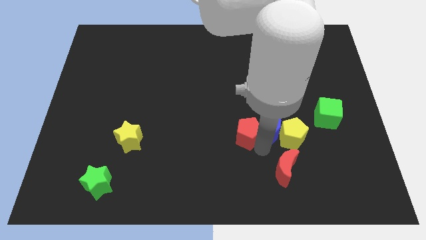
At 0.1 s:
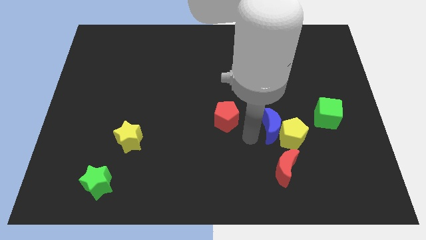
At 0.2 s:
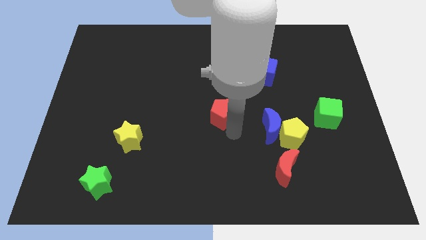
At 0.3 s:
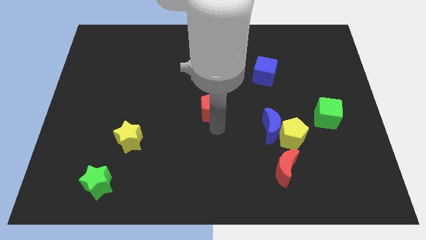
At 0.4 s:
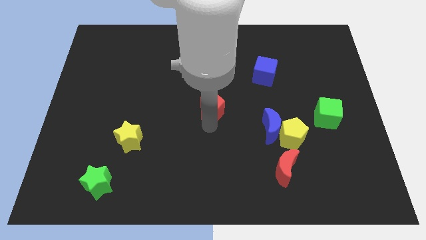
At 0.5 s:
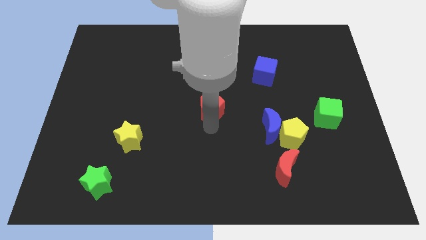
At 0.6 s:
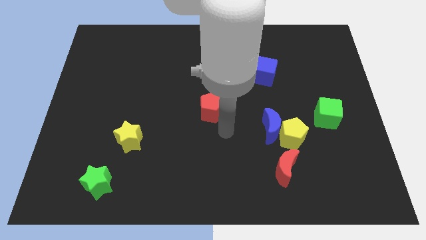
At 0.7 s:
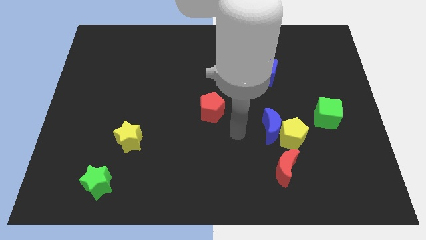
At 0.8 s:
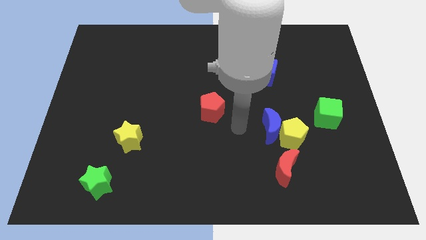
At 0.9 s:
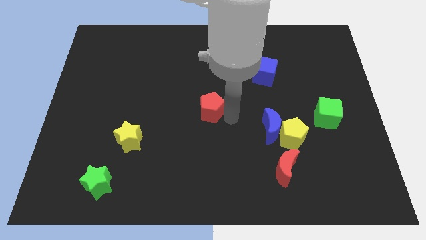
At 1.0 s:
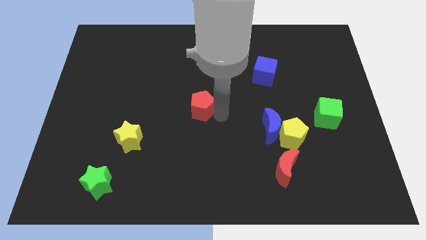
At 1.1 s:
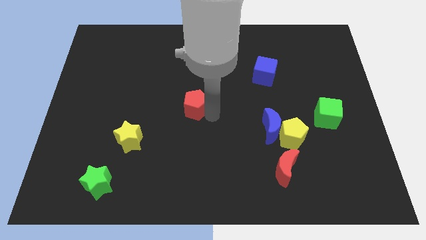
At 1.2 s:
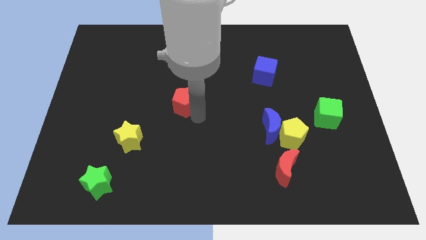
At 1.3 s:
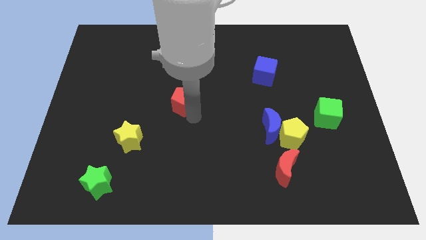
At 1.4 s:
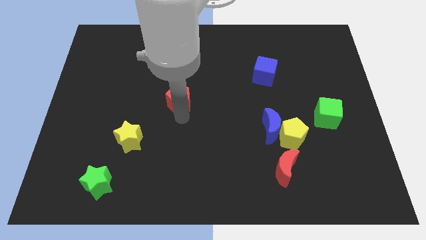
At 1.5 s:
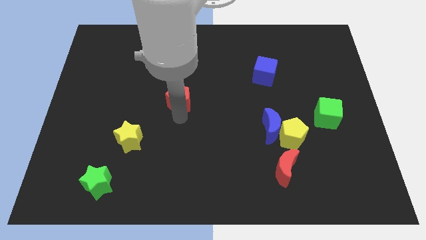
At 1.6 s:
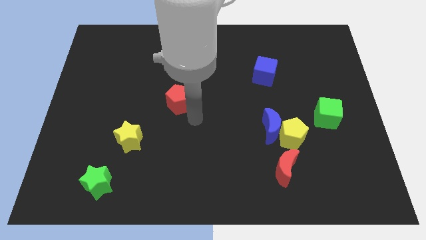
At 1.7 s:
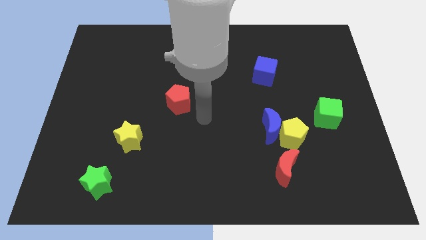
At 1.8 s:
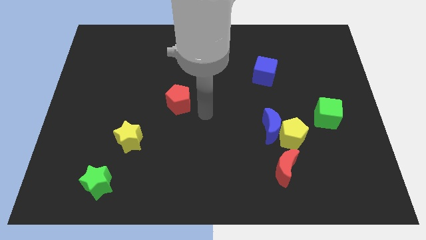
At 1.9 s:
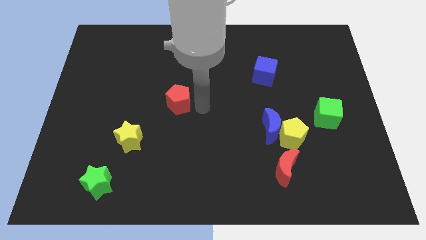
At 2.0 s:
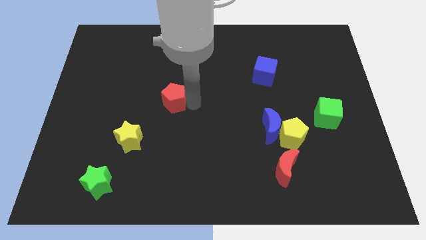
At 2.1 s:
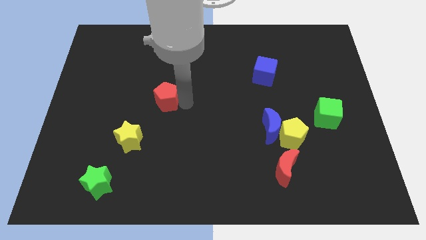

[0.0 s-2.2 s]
move the red pentagon to the top right of the yellow star

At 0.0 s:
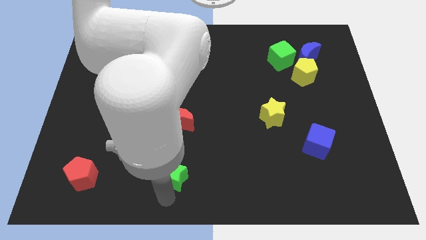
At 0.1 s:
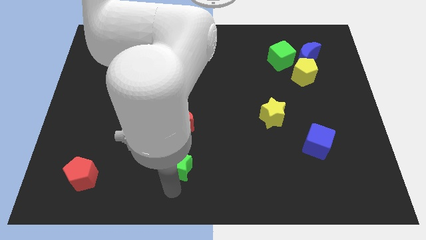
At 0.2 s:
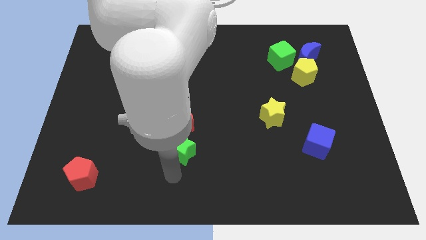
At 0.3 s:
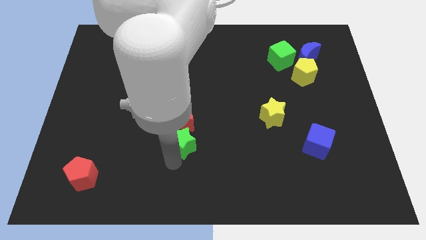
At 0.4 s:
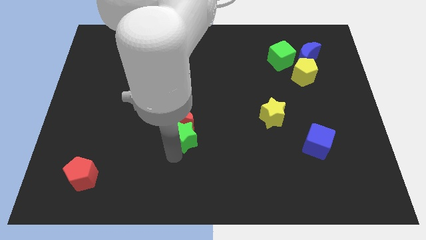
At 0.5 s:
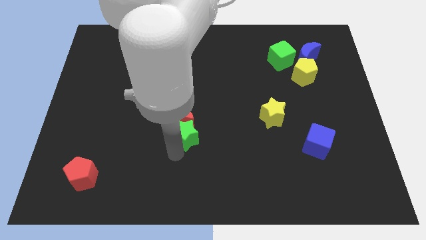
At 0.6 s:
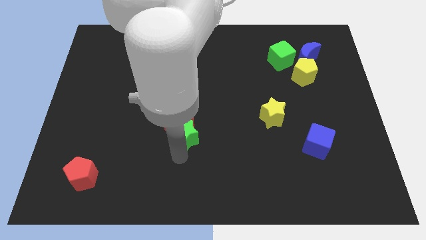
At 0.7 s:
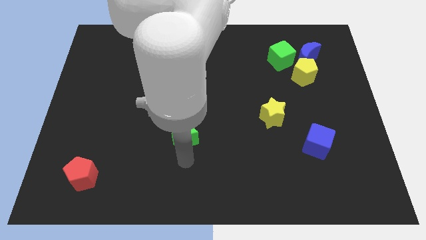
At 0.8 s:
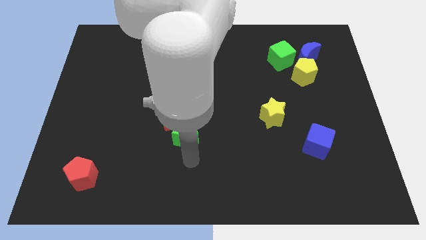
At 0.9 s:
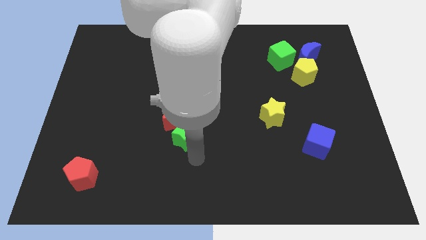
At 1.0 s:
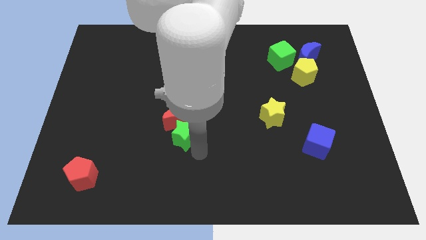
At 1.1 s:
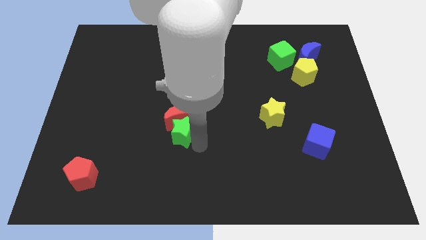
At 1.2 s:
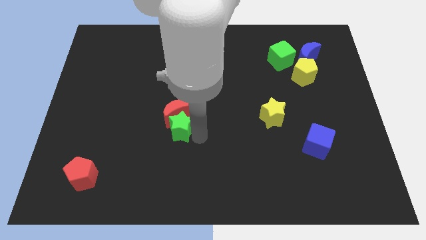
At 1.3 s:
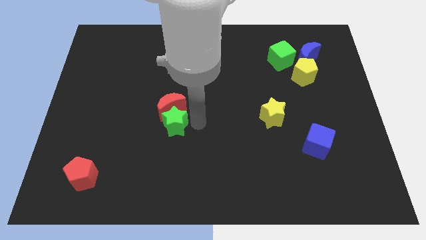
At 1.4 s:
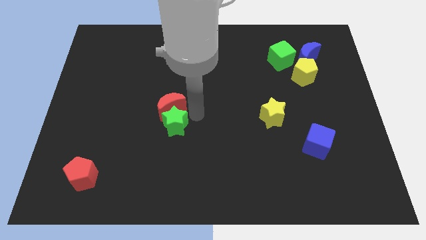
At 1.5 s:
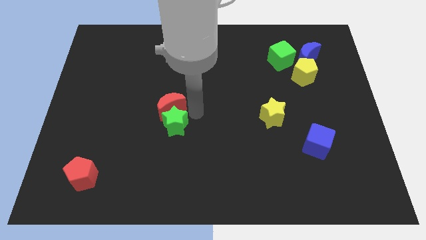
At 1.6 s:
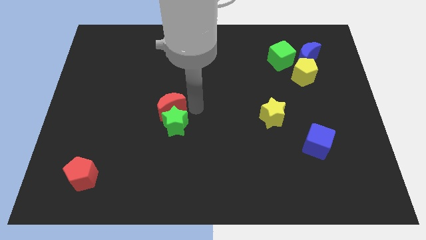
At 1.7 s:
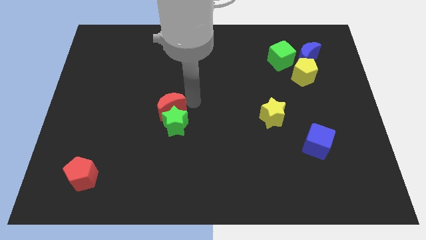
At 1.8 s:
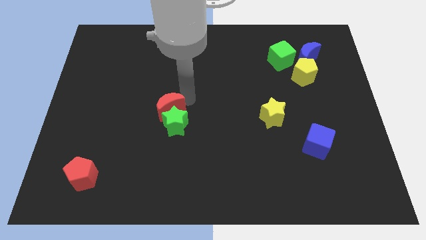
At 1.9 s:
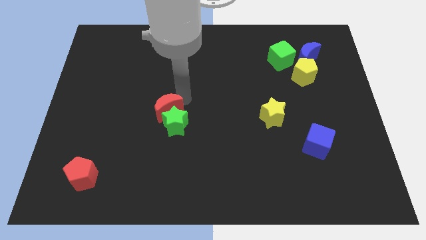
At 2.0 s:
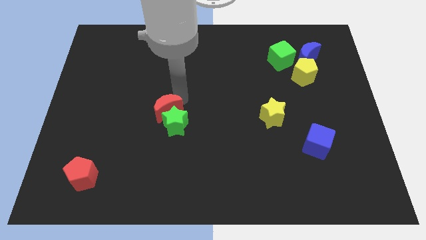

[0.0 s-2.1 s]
move the green star into red crescent

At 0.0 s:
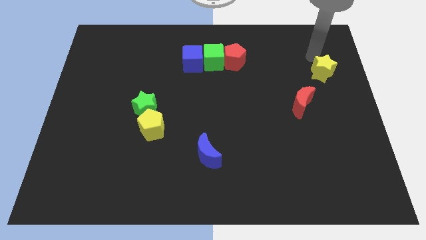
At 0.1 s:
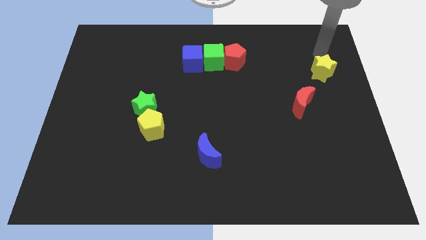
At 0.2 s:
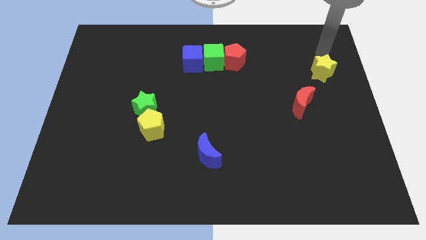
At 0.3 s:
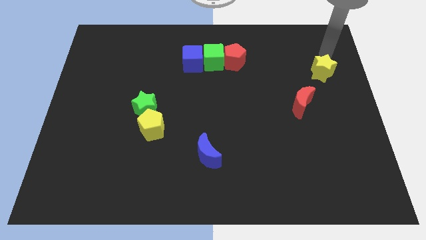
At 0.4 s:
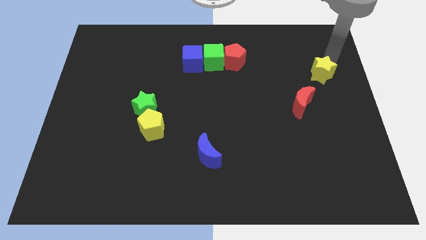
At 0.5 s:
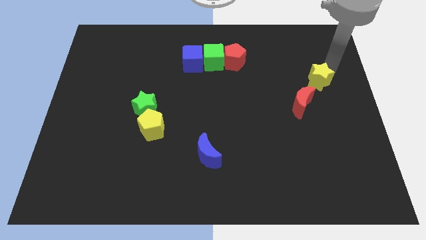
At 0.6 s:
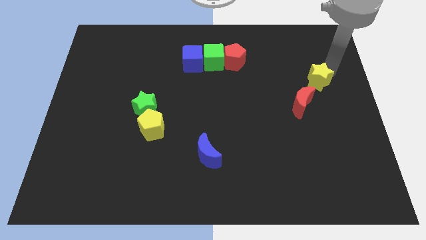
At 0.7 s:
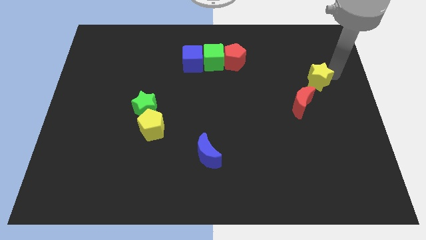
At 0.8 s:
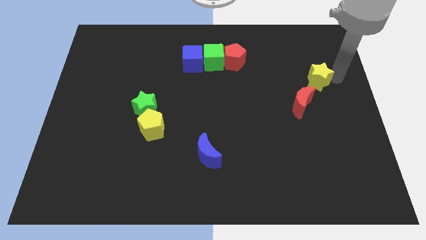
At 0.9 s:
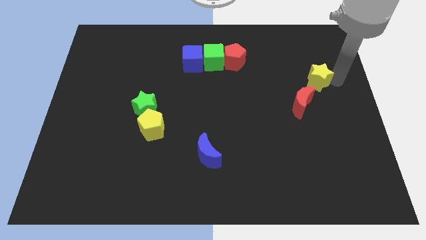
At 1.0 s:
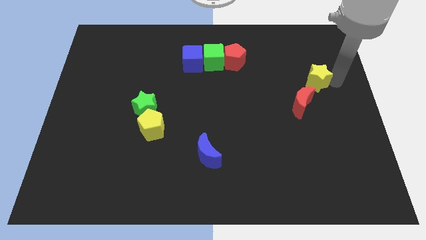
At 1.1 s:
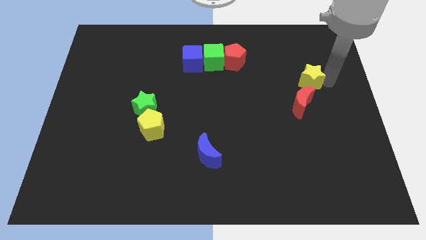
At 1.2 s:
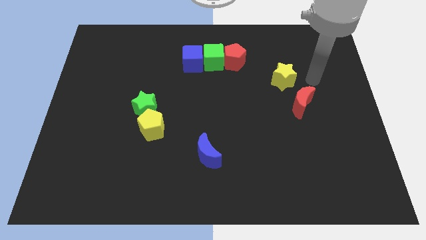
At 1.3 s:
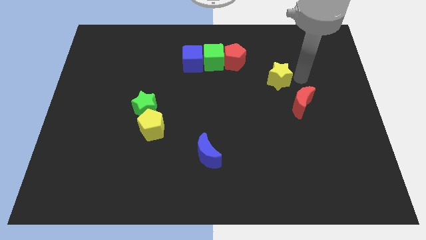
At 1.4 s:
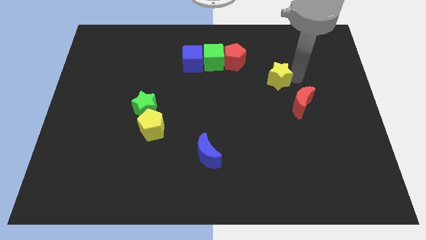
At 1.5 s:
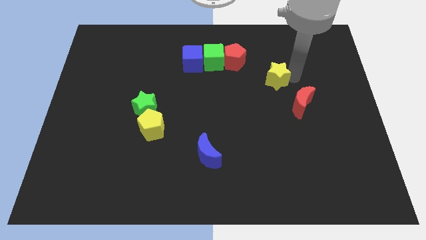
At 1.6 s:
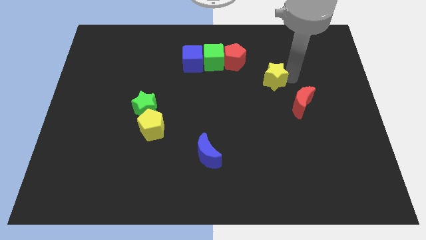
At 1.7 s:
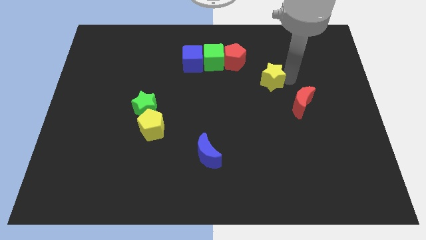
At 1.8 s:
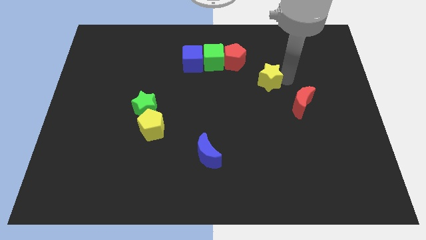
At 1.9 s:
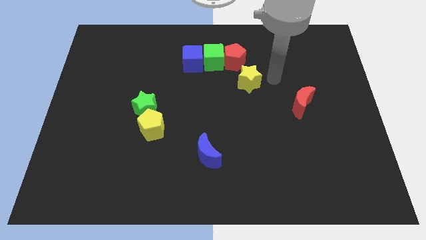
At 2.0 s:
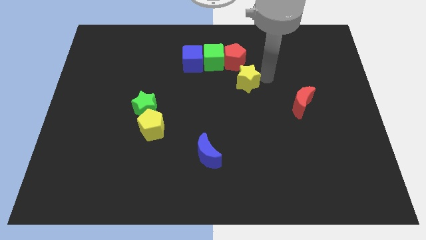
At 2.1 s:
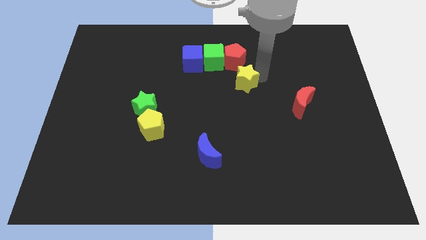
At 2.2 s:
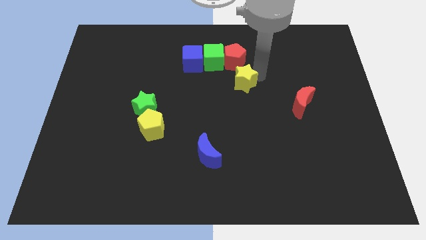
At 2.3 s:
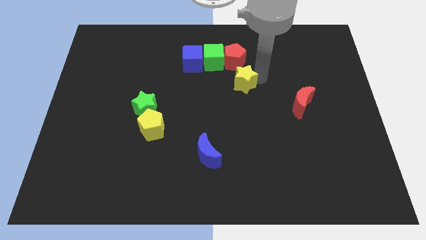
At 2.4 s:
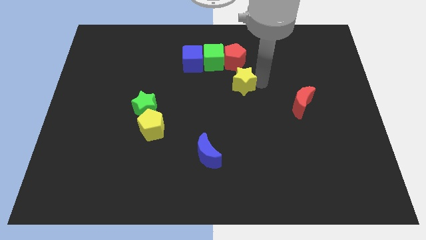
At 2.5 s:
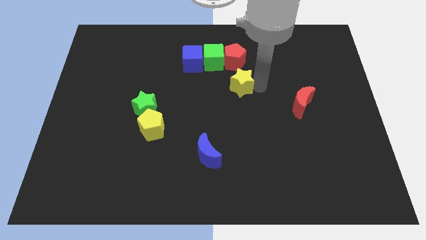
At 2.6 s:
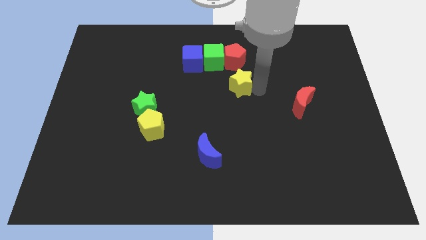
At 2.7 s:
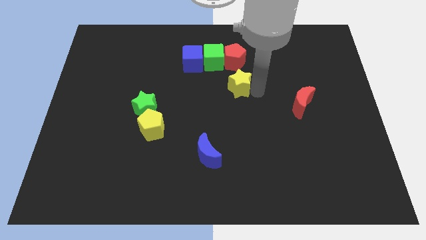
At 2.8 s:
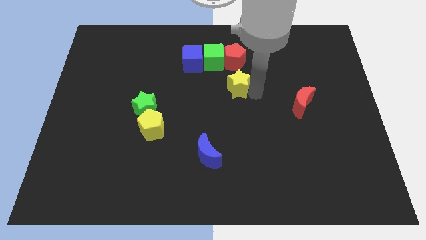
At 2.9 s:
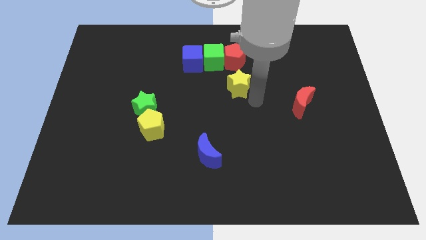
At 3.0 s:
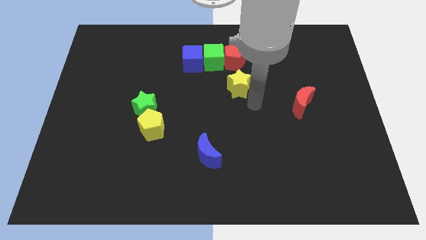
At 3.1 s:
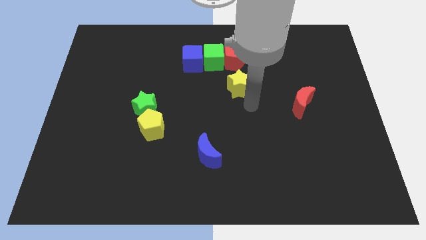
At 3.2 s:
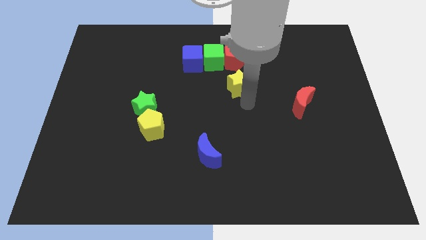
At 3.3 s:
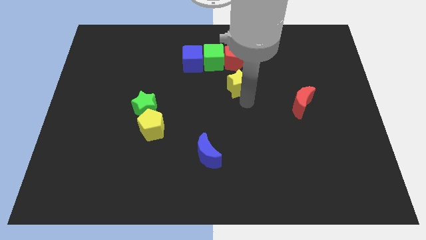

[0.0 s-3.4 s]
slide the yellow star to the center

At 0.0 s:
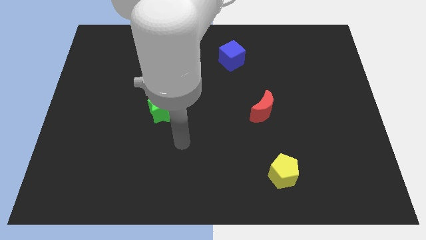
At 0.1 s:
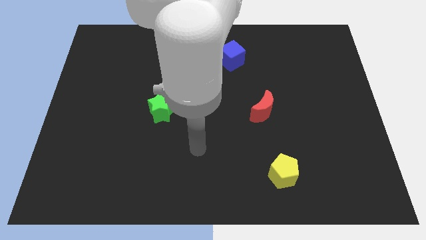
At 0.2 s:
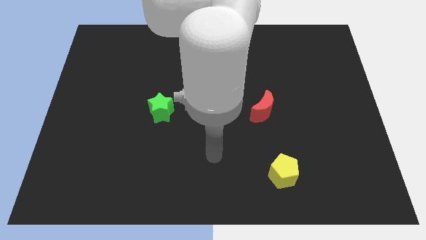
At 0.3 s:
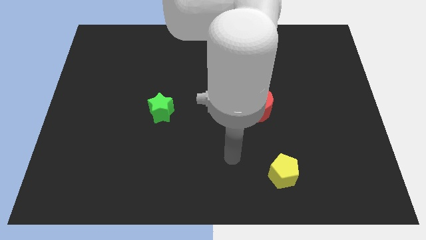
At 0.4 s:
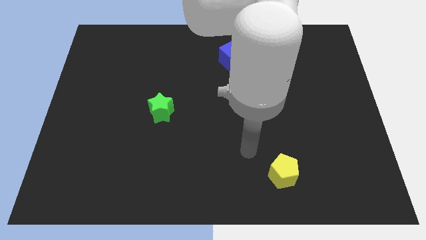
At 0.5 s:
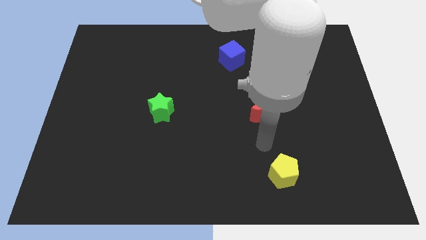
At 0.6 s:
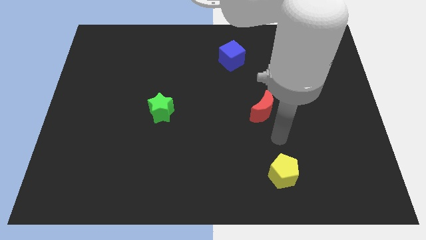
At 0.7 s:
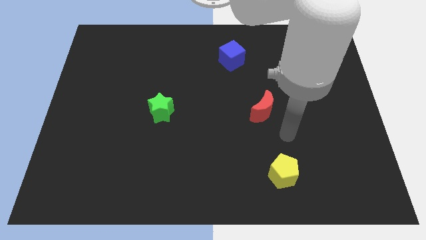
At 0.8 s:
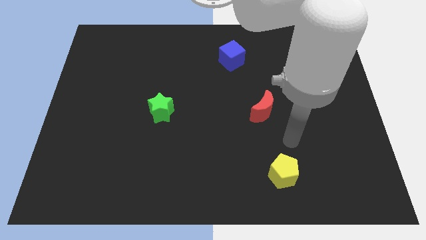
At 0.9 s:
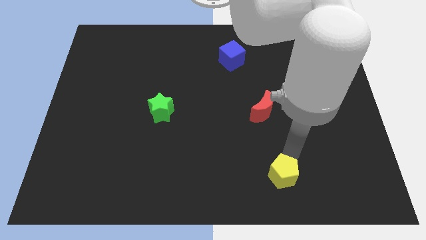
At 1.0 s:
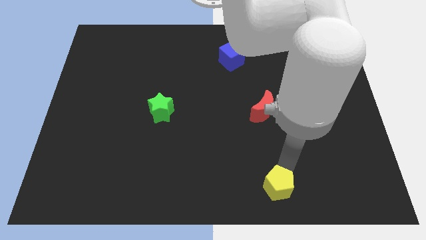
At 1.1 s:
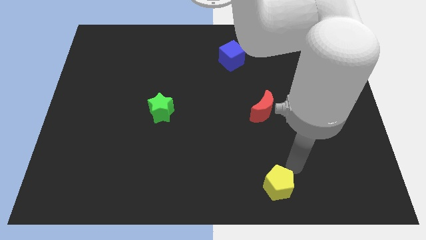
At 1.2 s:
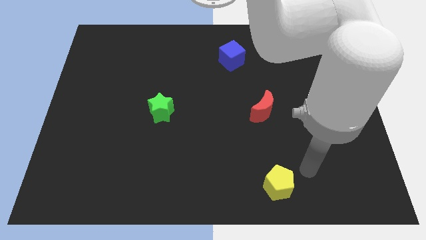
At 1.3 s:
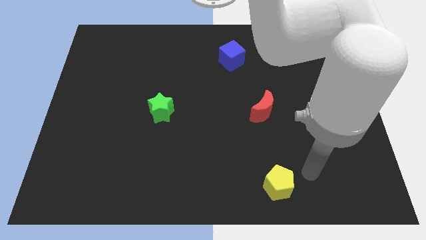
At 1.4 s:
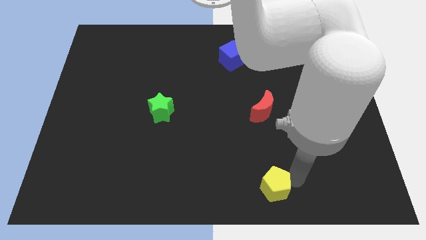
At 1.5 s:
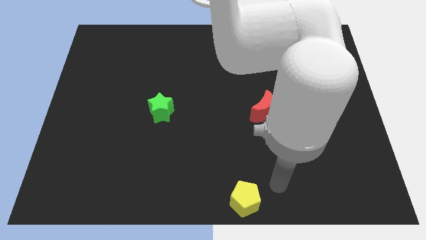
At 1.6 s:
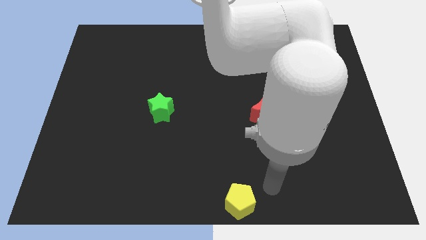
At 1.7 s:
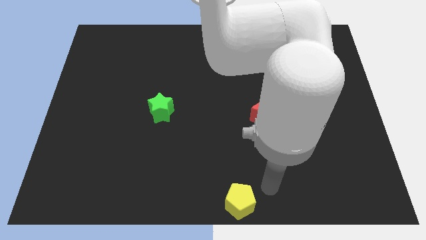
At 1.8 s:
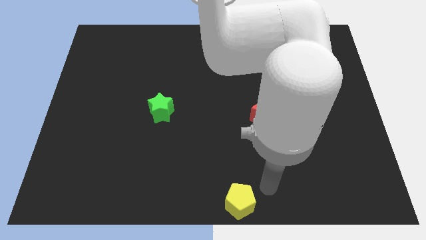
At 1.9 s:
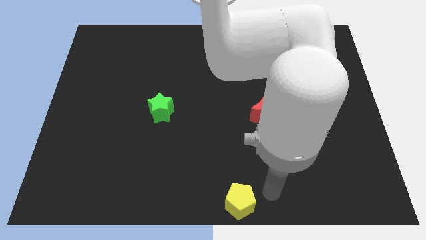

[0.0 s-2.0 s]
push the yellow block to the bottom center
